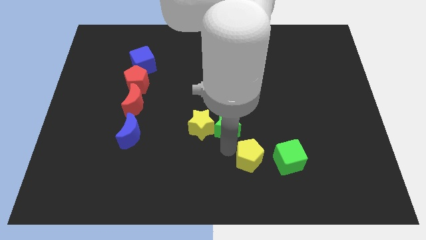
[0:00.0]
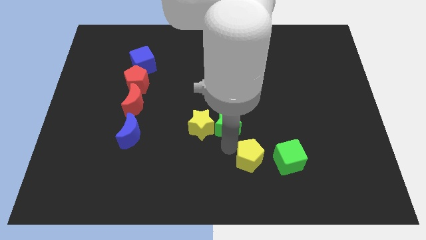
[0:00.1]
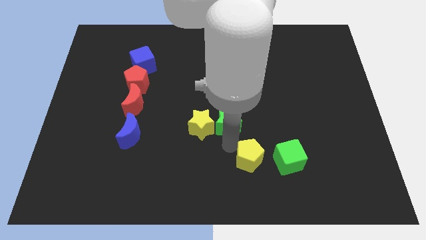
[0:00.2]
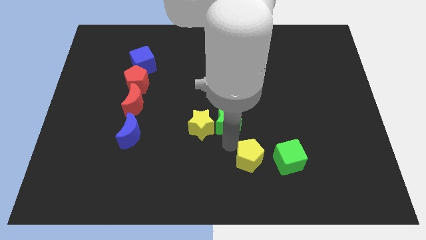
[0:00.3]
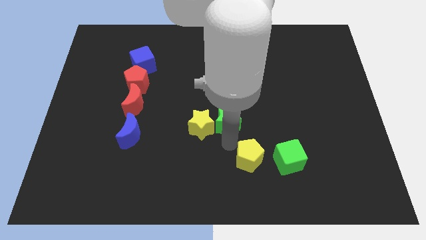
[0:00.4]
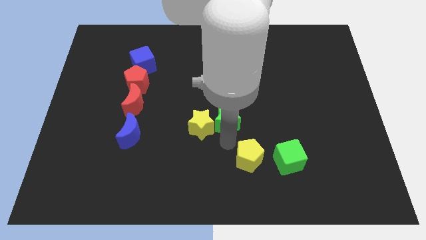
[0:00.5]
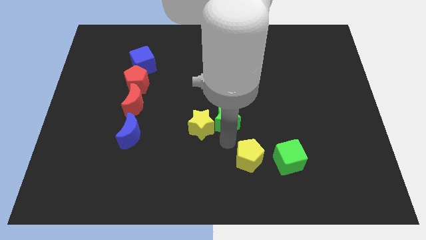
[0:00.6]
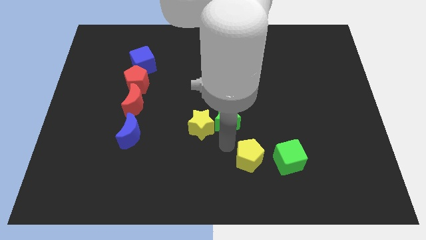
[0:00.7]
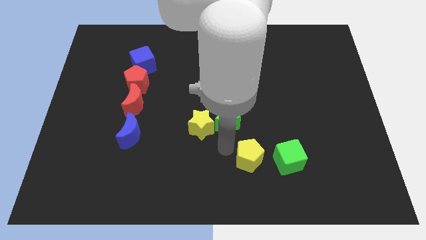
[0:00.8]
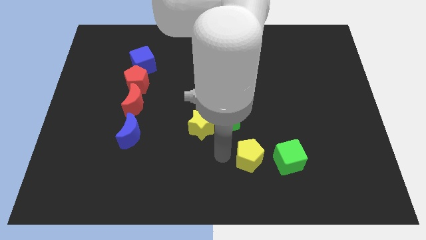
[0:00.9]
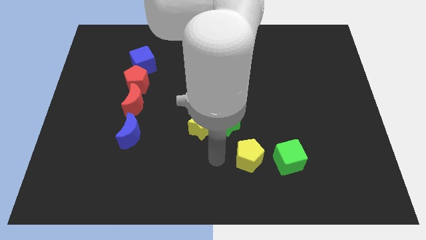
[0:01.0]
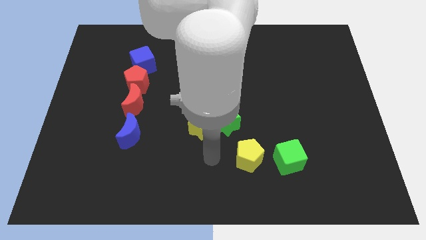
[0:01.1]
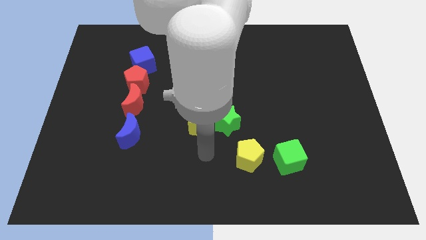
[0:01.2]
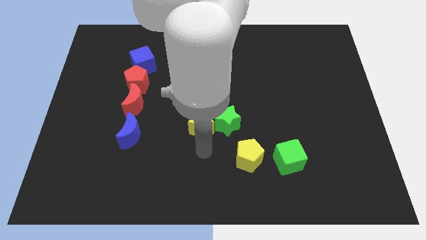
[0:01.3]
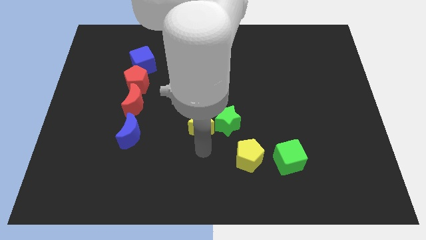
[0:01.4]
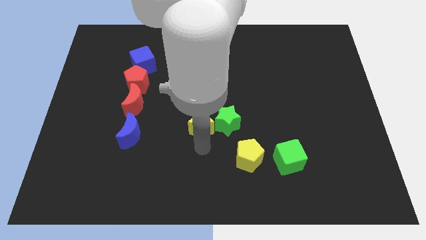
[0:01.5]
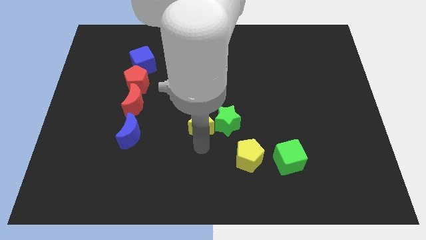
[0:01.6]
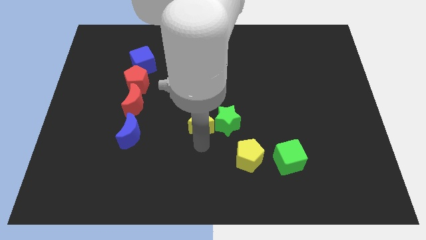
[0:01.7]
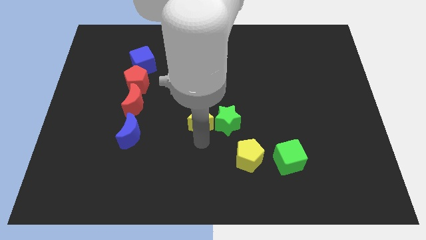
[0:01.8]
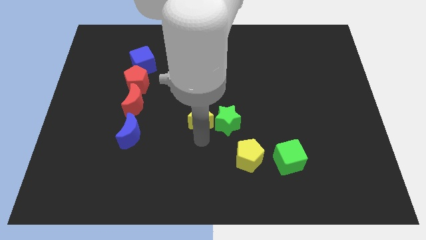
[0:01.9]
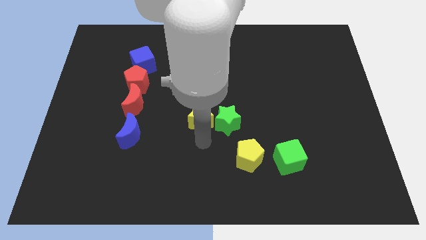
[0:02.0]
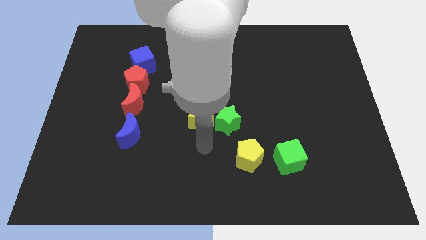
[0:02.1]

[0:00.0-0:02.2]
move the green star and yellow star slightly upwards

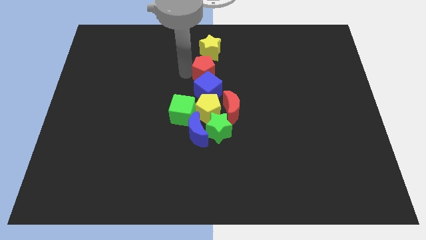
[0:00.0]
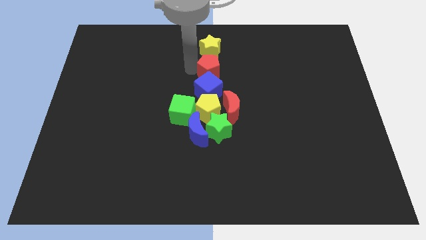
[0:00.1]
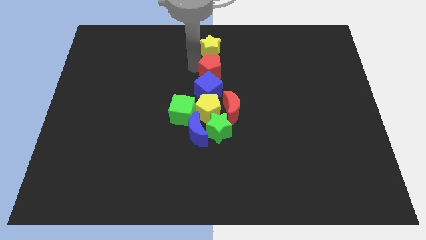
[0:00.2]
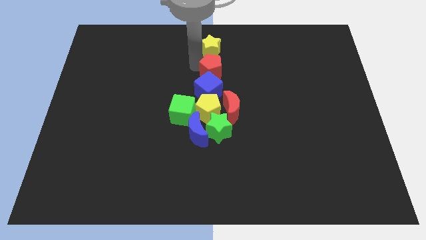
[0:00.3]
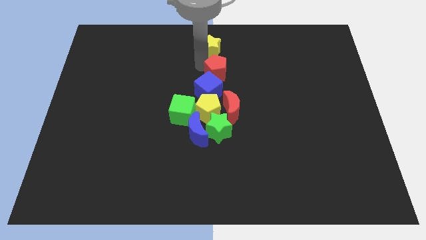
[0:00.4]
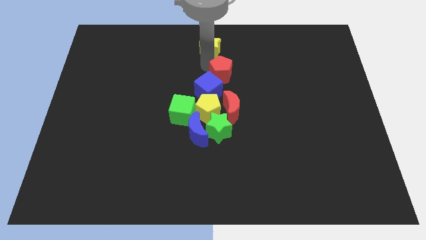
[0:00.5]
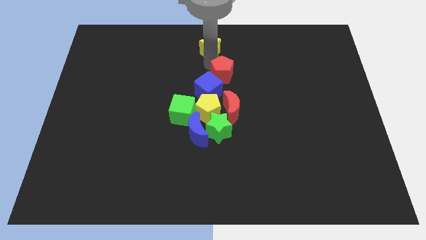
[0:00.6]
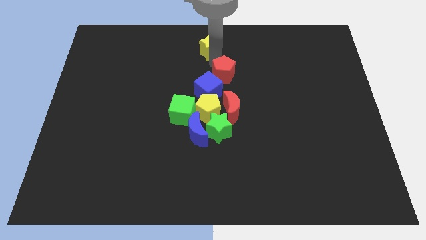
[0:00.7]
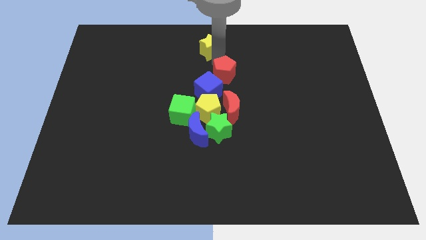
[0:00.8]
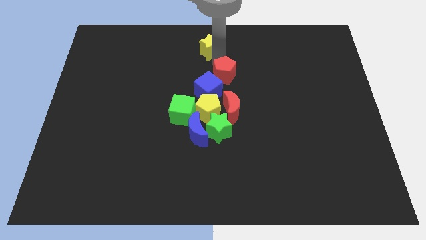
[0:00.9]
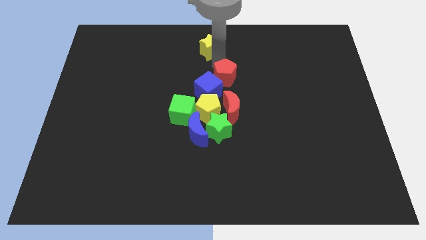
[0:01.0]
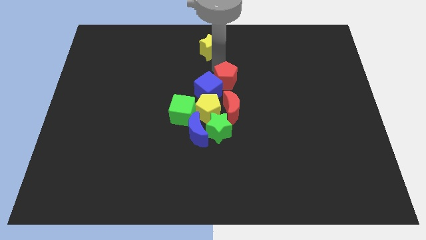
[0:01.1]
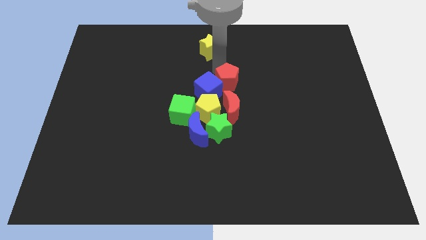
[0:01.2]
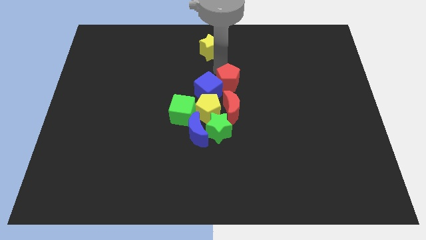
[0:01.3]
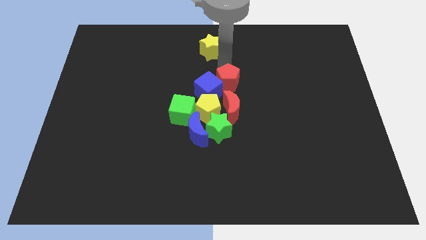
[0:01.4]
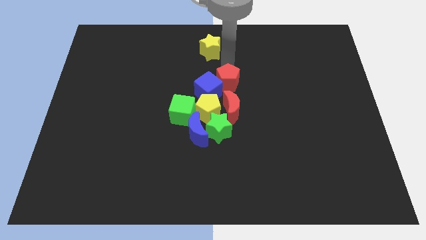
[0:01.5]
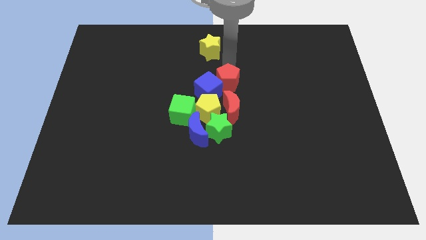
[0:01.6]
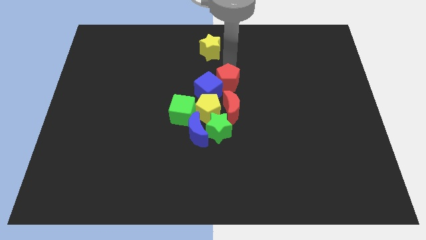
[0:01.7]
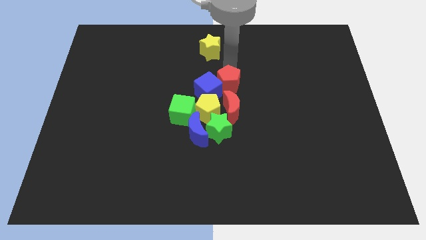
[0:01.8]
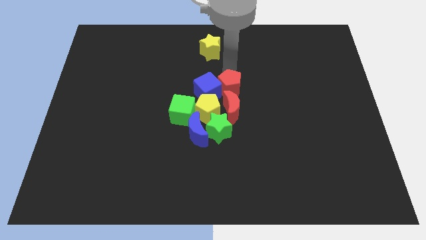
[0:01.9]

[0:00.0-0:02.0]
drag the red pentagon diagonally bottom right to the yellow star

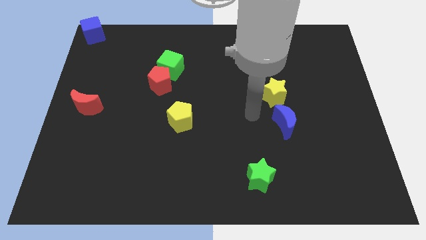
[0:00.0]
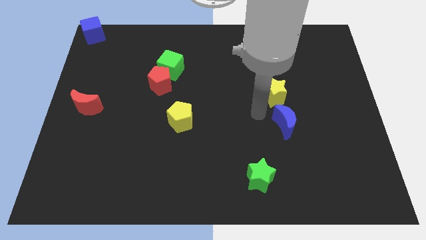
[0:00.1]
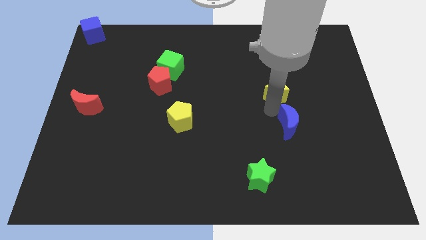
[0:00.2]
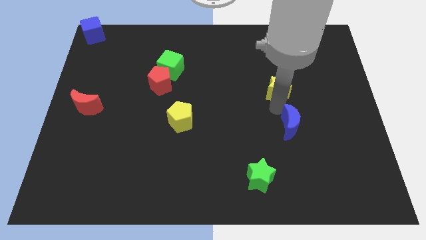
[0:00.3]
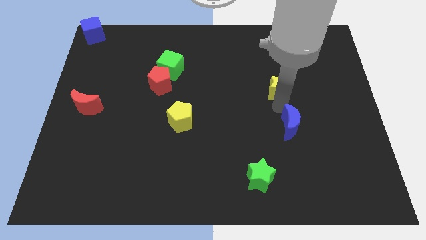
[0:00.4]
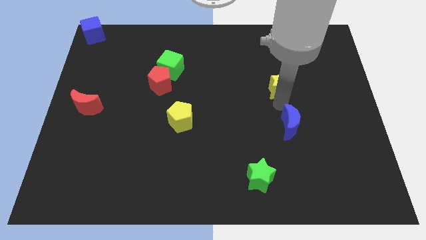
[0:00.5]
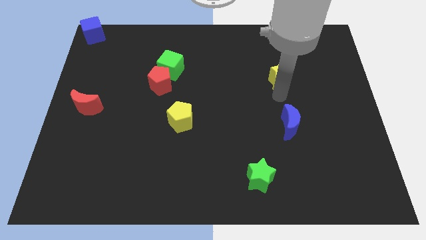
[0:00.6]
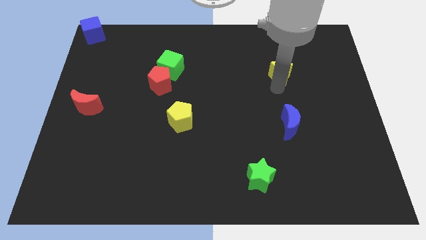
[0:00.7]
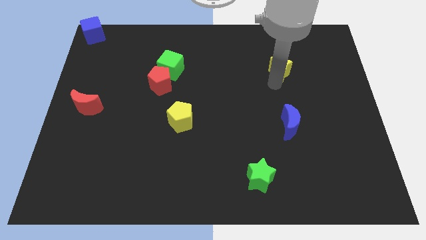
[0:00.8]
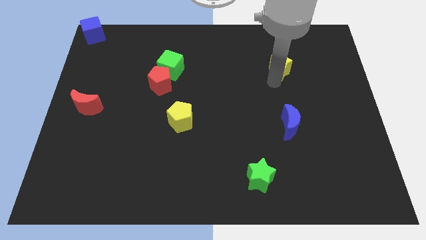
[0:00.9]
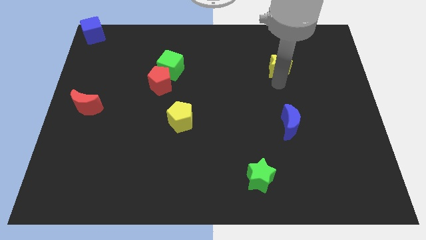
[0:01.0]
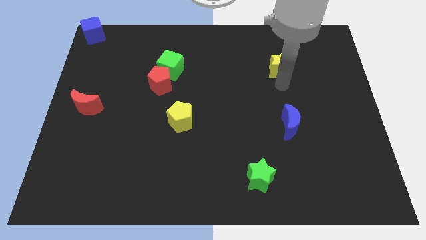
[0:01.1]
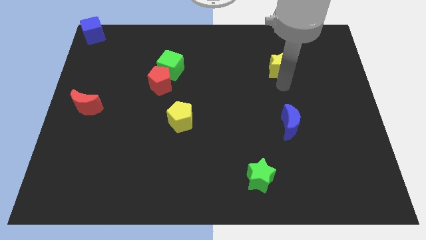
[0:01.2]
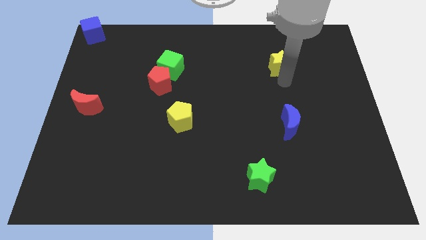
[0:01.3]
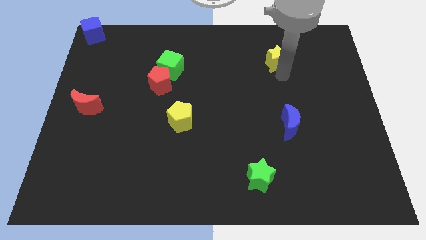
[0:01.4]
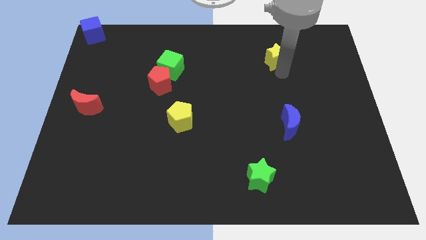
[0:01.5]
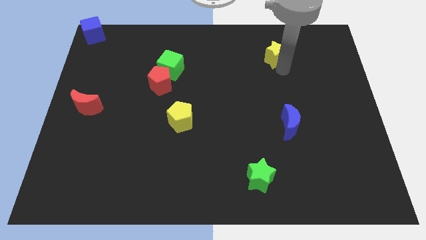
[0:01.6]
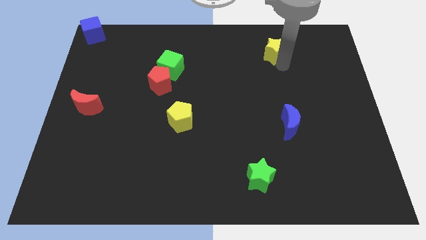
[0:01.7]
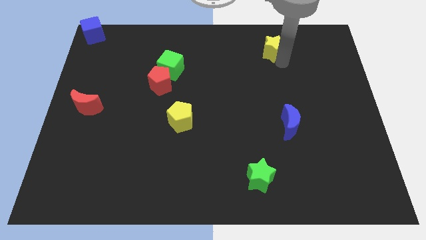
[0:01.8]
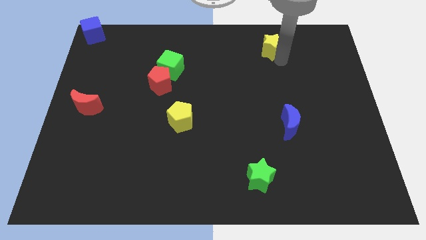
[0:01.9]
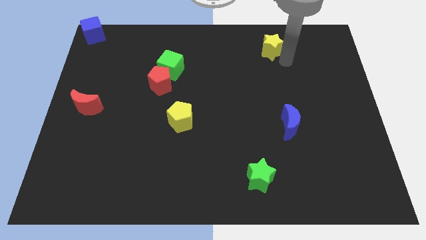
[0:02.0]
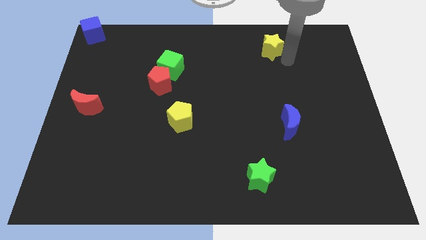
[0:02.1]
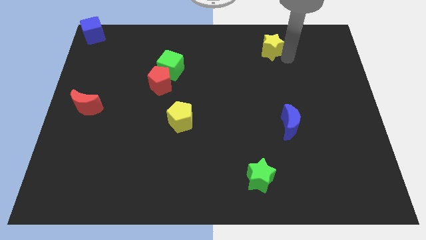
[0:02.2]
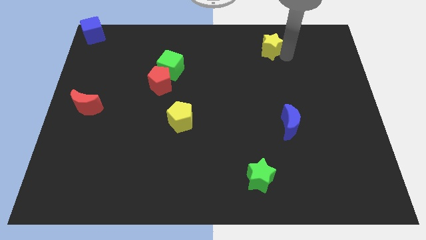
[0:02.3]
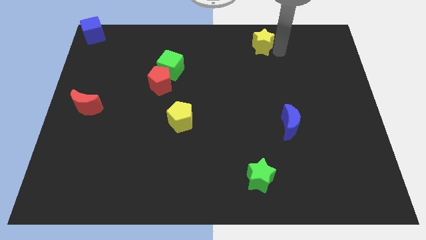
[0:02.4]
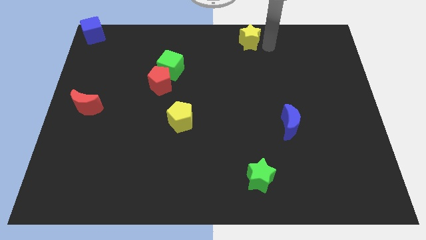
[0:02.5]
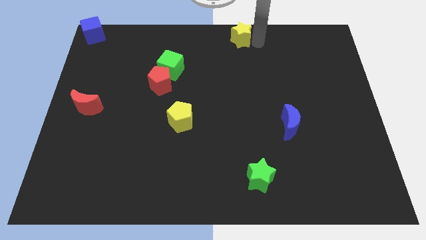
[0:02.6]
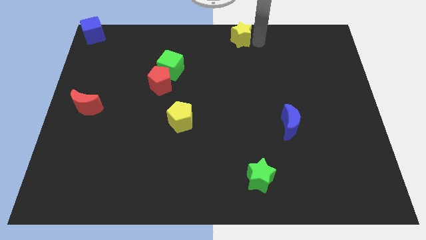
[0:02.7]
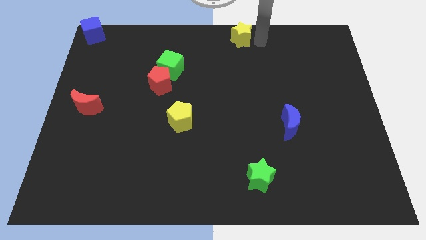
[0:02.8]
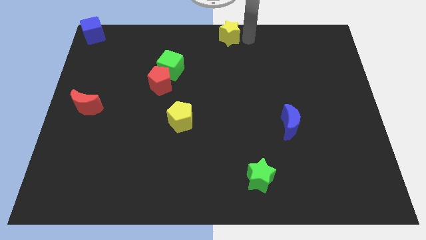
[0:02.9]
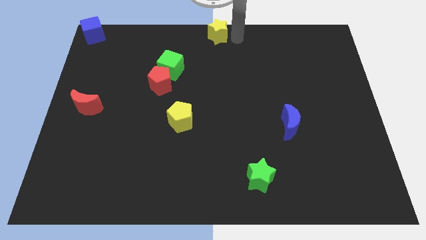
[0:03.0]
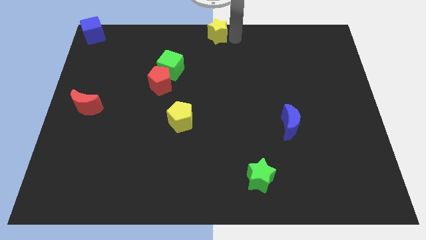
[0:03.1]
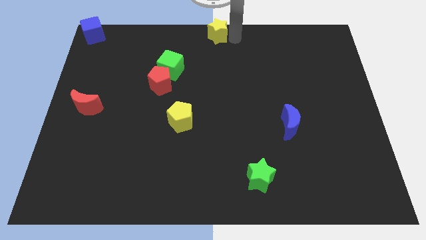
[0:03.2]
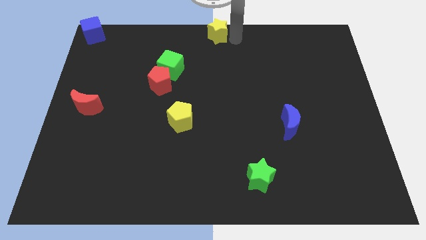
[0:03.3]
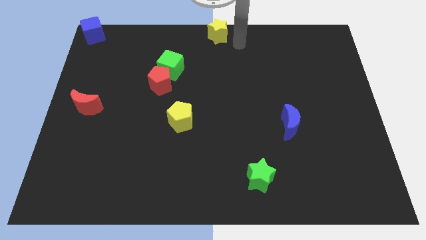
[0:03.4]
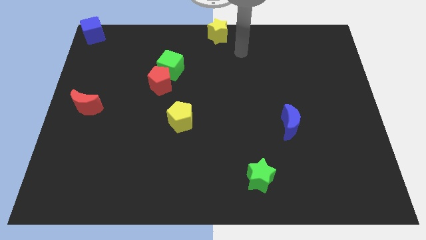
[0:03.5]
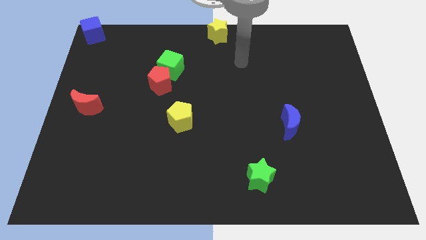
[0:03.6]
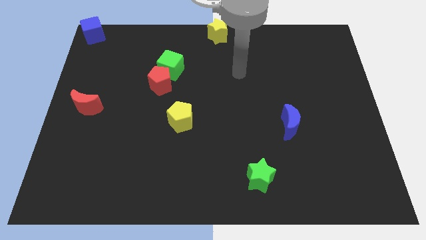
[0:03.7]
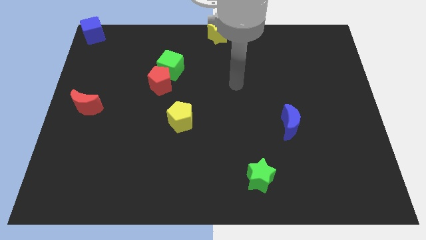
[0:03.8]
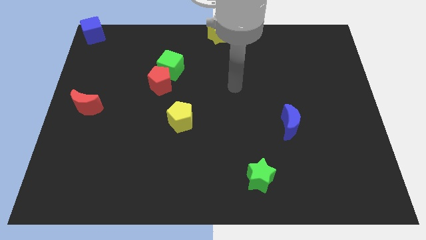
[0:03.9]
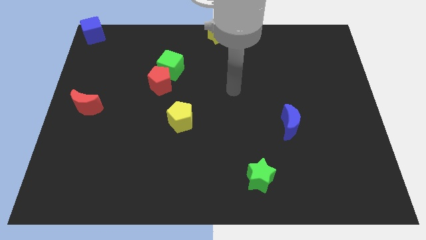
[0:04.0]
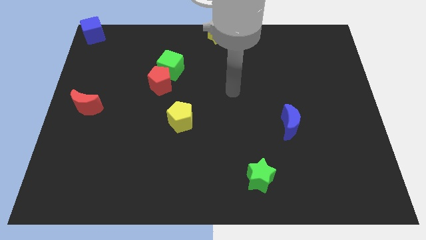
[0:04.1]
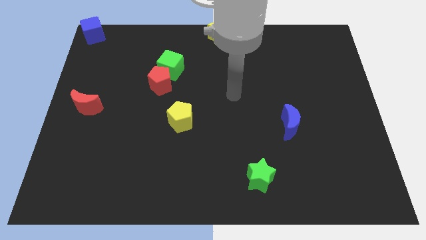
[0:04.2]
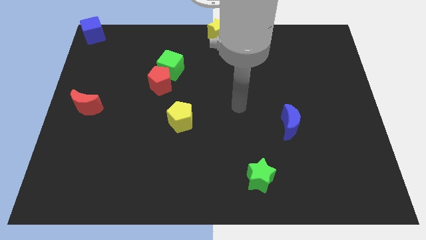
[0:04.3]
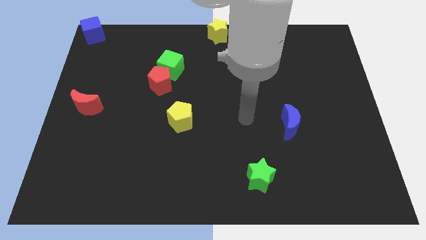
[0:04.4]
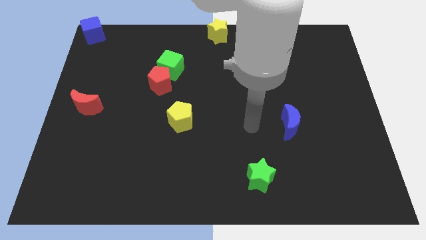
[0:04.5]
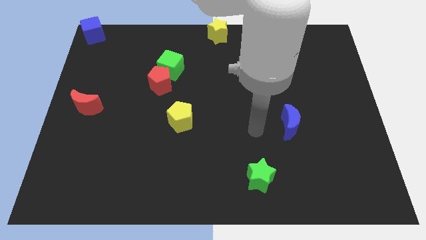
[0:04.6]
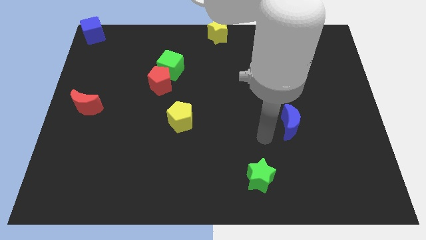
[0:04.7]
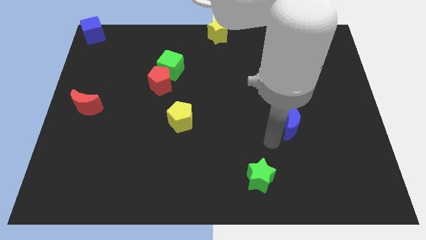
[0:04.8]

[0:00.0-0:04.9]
move the yellow star towards the top center of the board
